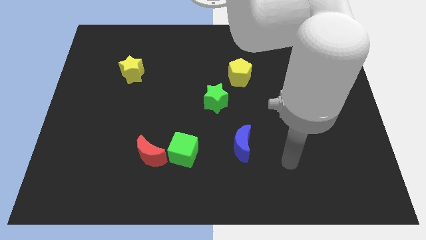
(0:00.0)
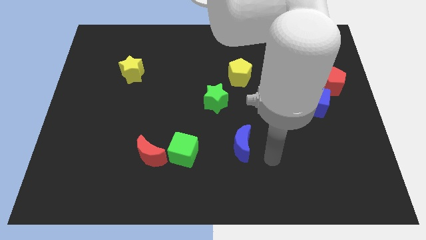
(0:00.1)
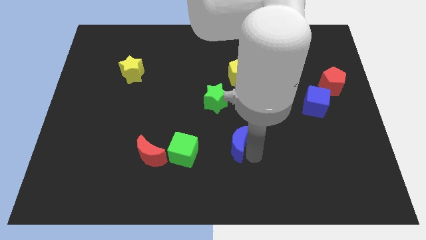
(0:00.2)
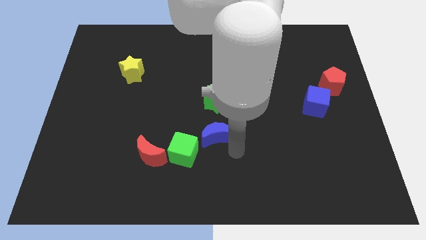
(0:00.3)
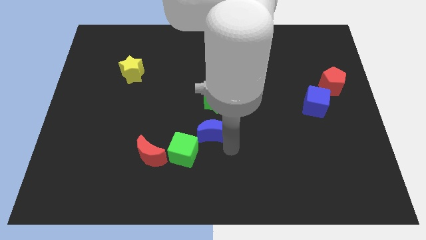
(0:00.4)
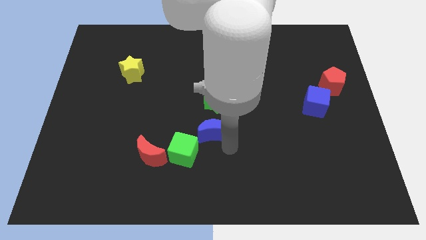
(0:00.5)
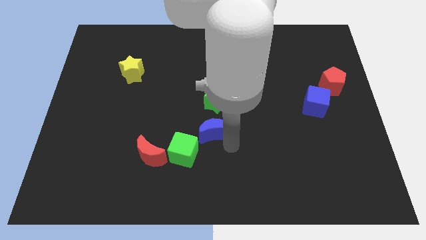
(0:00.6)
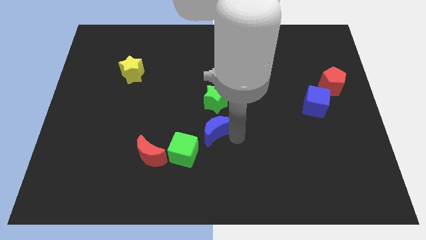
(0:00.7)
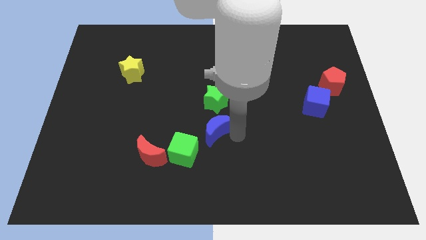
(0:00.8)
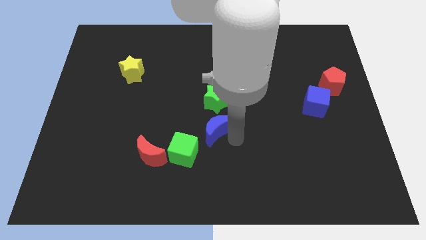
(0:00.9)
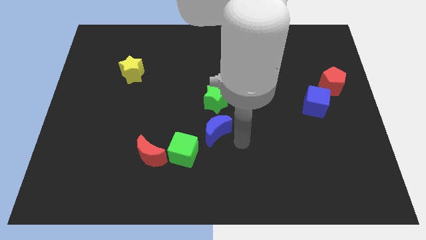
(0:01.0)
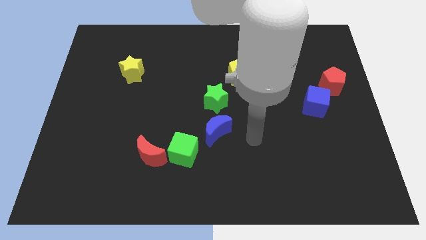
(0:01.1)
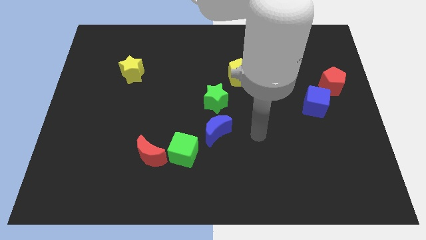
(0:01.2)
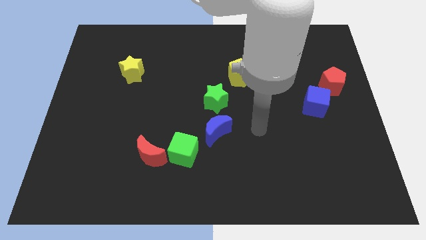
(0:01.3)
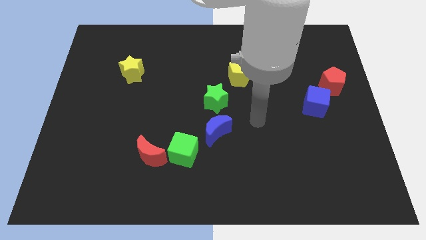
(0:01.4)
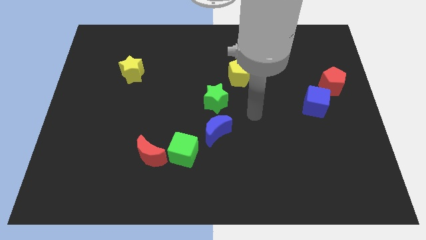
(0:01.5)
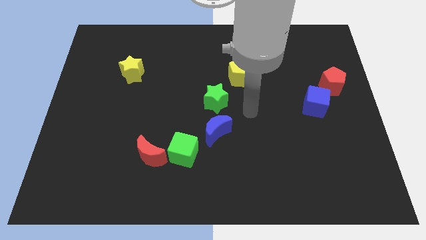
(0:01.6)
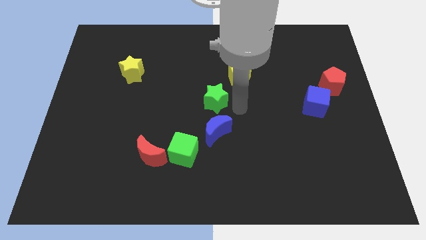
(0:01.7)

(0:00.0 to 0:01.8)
move the blue crescent to the bottom of the green star

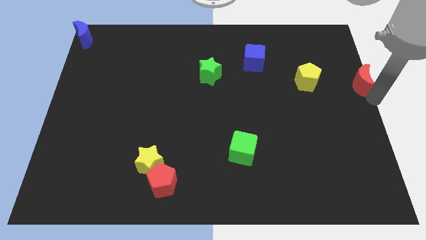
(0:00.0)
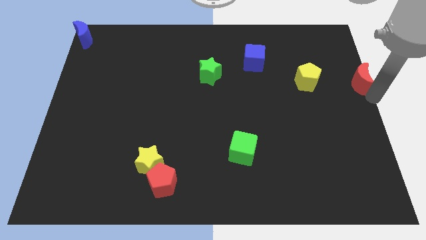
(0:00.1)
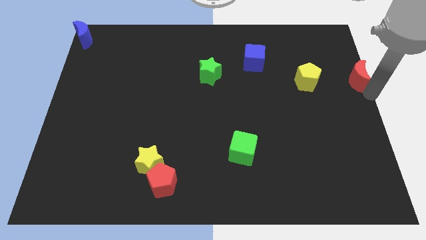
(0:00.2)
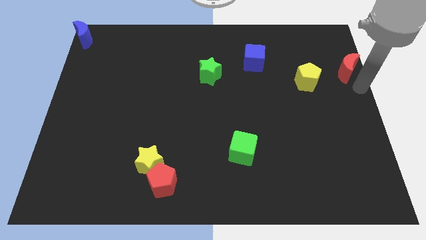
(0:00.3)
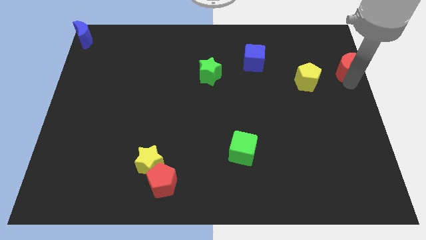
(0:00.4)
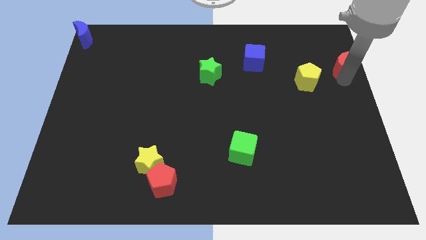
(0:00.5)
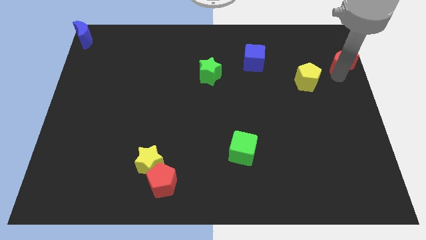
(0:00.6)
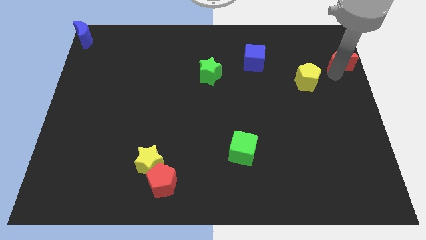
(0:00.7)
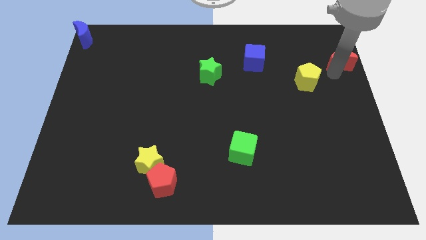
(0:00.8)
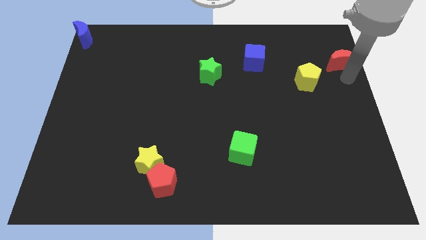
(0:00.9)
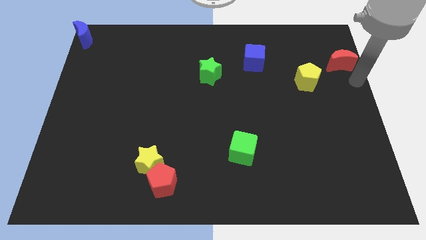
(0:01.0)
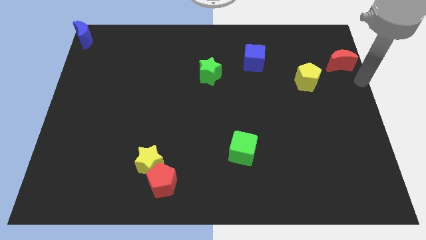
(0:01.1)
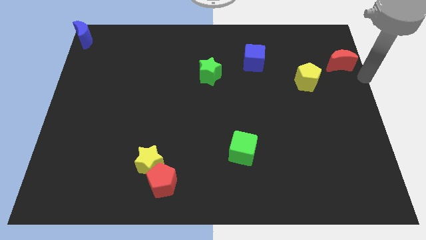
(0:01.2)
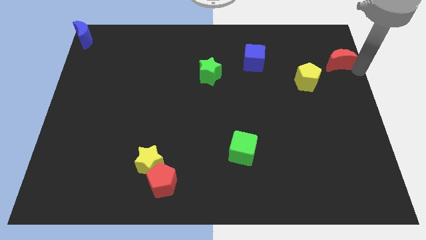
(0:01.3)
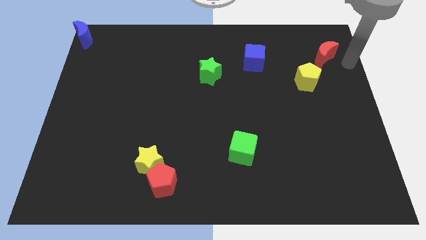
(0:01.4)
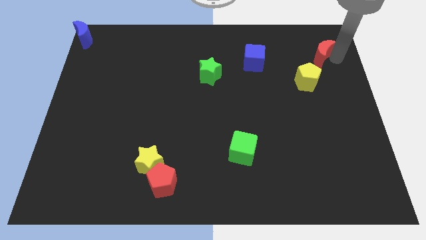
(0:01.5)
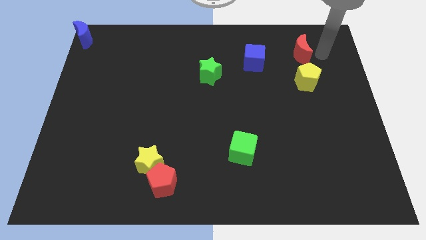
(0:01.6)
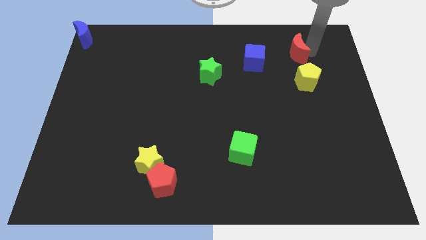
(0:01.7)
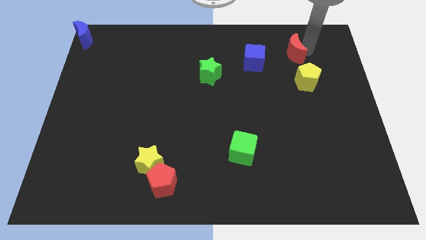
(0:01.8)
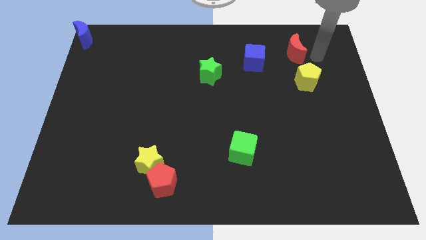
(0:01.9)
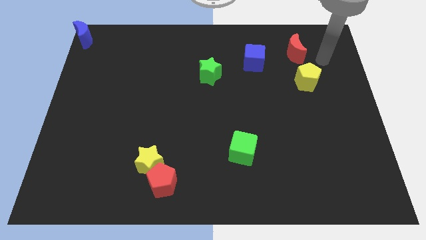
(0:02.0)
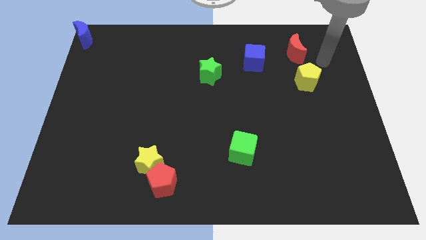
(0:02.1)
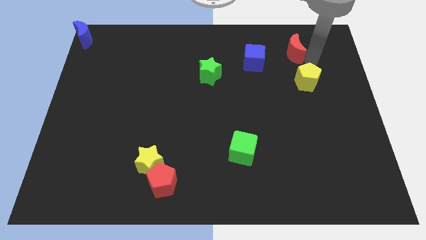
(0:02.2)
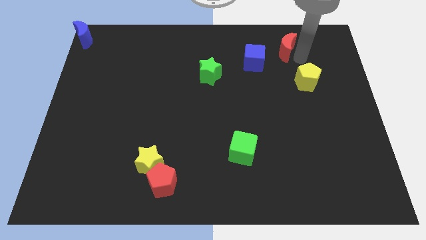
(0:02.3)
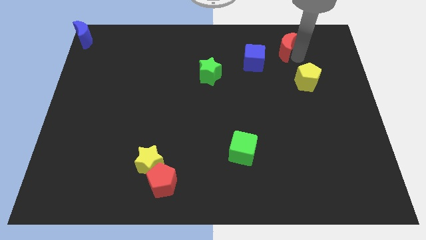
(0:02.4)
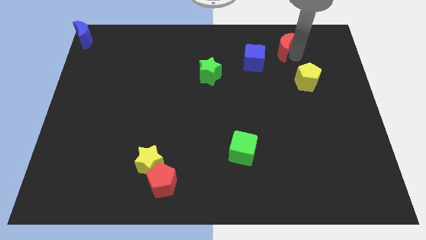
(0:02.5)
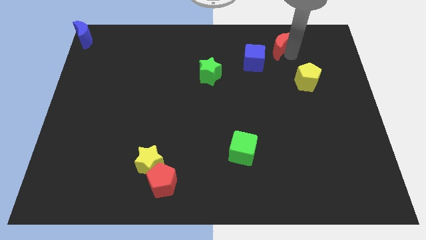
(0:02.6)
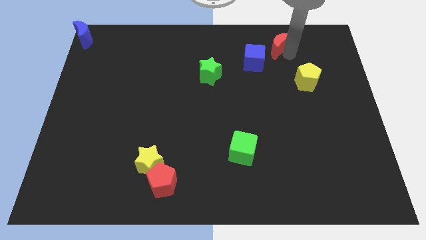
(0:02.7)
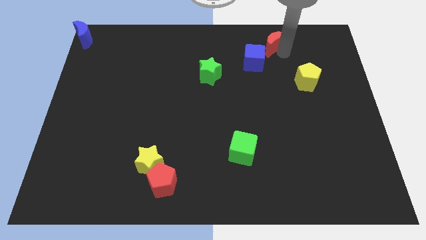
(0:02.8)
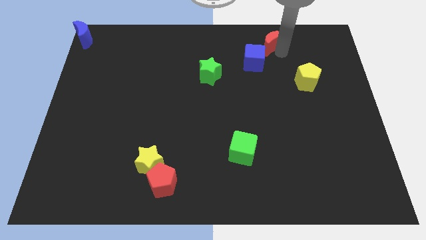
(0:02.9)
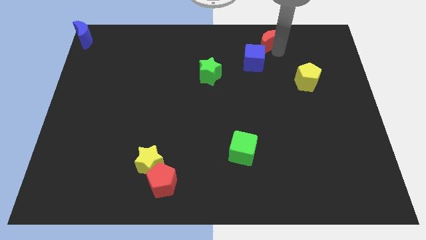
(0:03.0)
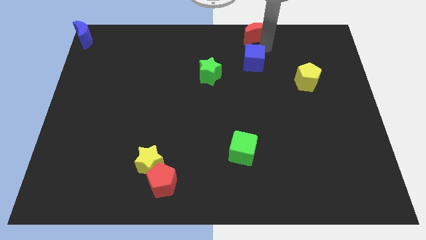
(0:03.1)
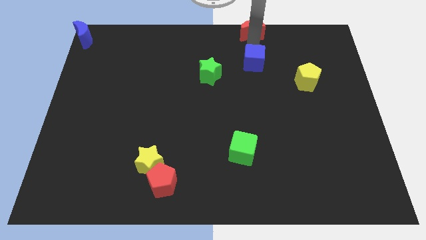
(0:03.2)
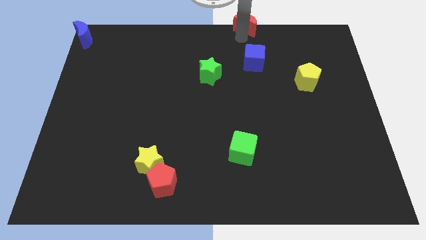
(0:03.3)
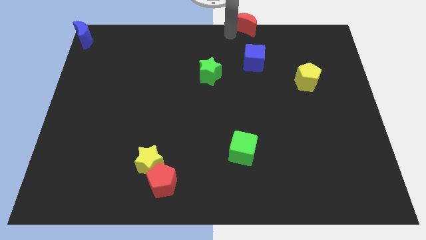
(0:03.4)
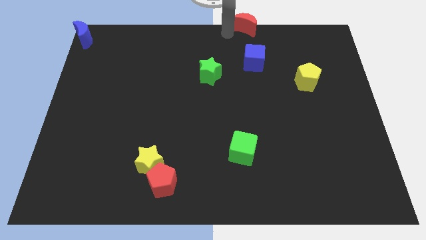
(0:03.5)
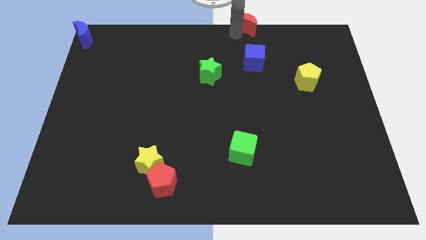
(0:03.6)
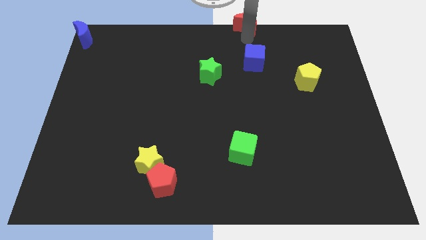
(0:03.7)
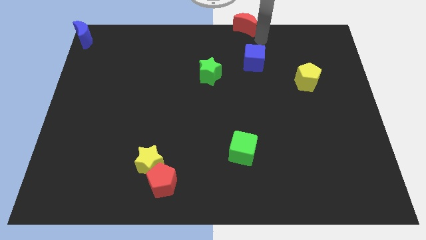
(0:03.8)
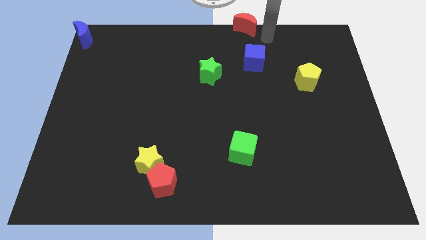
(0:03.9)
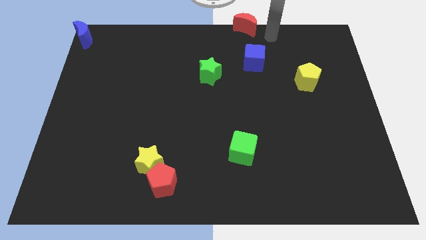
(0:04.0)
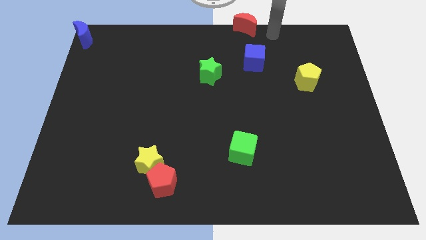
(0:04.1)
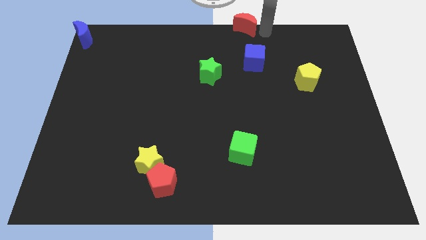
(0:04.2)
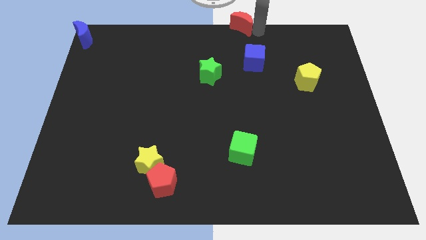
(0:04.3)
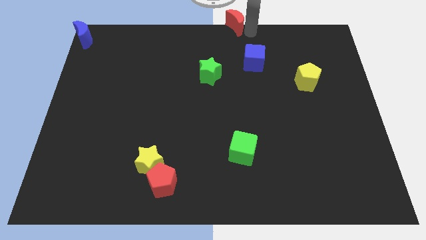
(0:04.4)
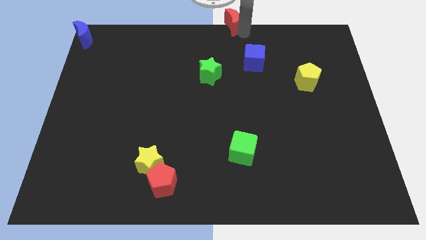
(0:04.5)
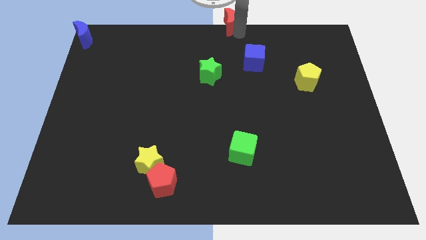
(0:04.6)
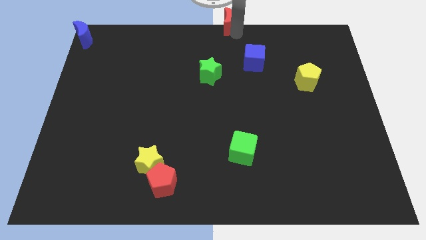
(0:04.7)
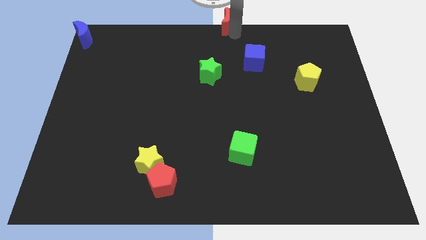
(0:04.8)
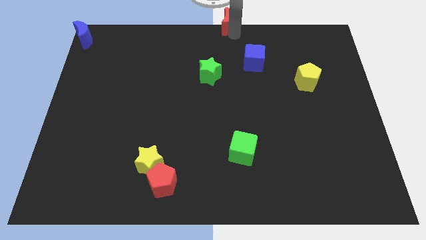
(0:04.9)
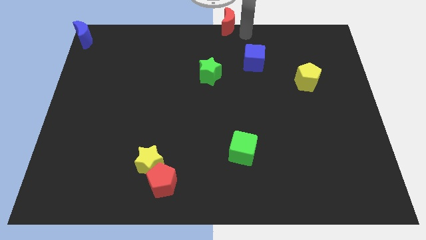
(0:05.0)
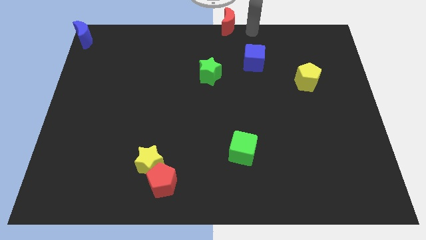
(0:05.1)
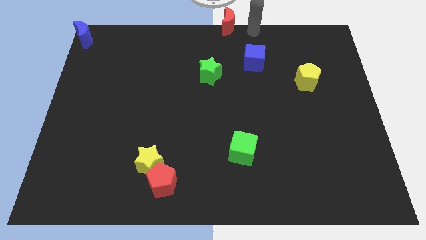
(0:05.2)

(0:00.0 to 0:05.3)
move the red moon to the top center of the board

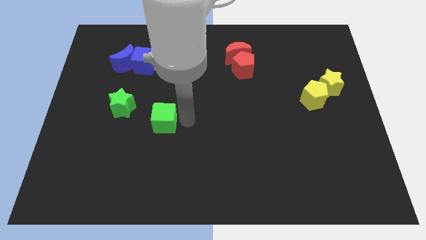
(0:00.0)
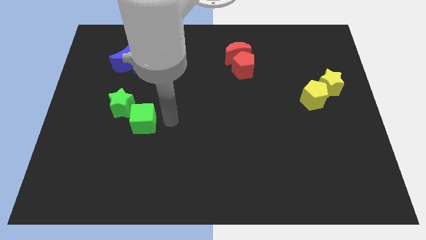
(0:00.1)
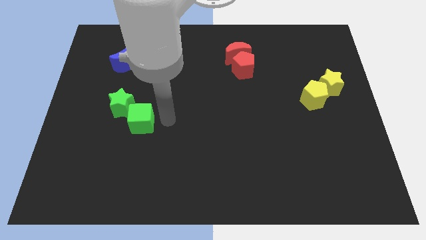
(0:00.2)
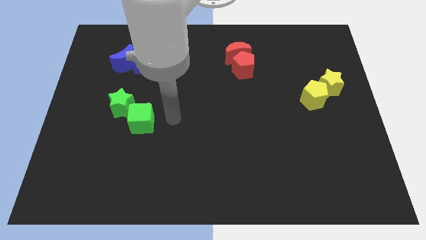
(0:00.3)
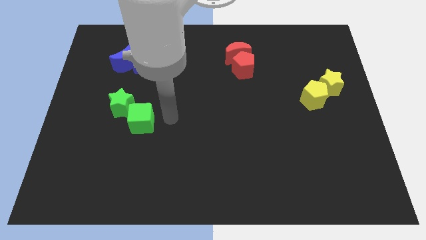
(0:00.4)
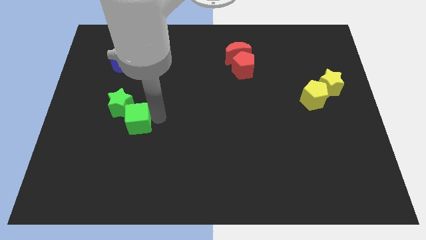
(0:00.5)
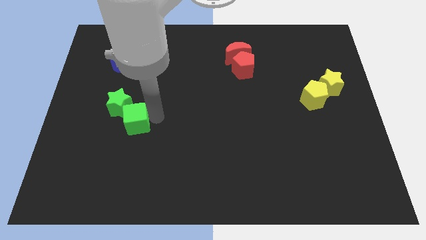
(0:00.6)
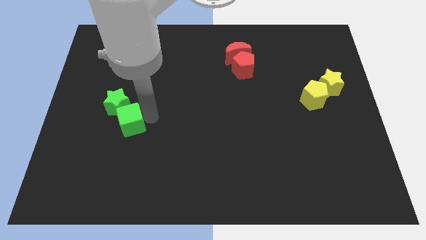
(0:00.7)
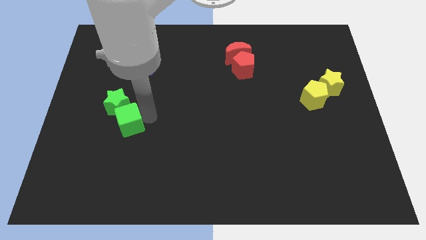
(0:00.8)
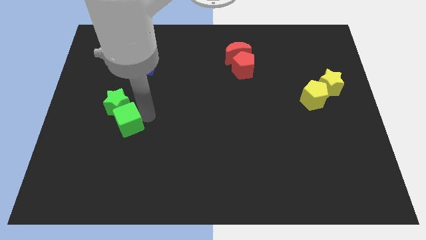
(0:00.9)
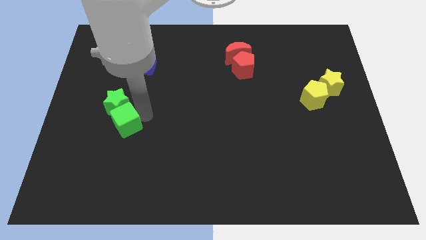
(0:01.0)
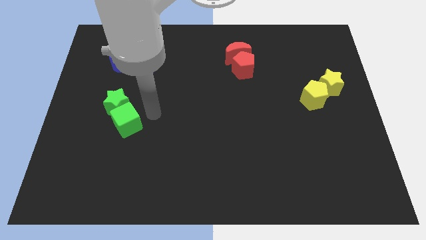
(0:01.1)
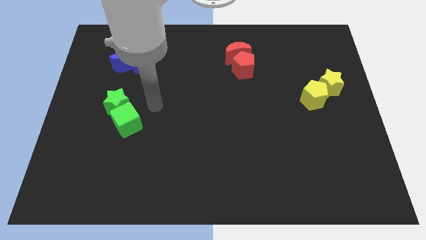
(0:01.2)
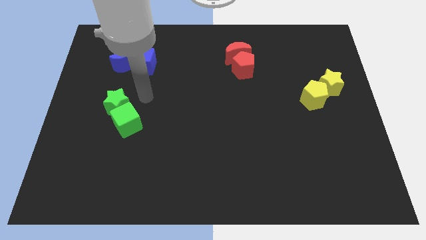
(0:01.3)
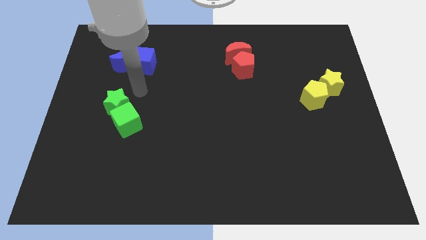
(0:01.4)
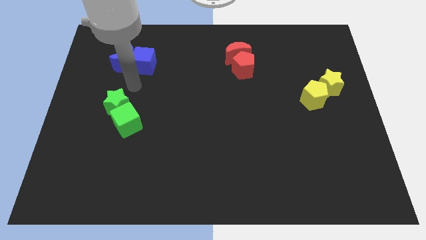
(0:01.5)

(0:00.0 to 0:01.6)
drag the green cube close to the green star

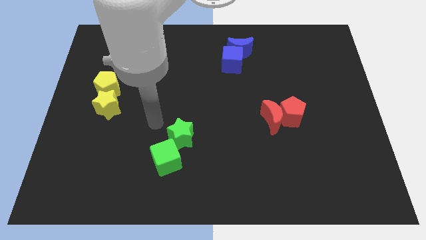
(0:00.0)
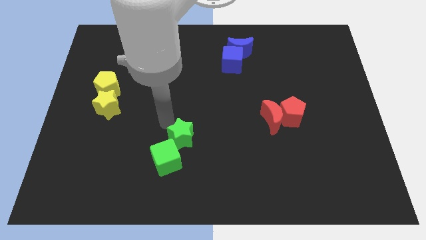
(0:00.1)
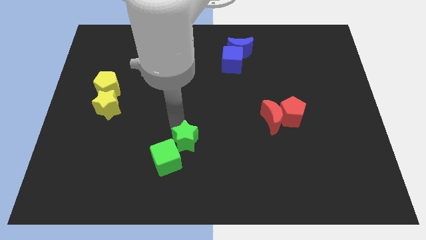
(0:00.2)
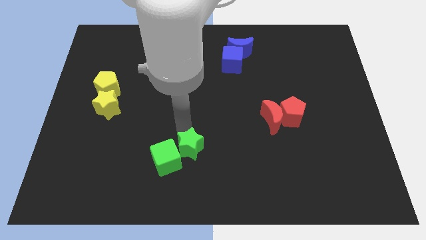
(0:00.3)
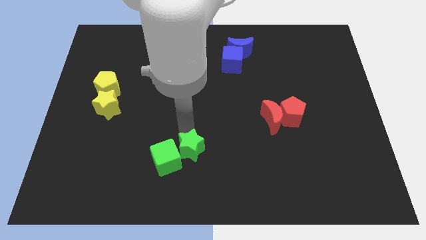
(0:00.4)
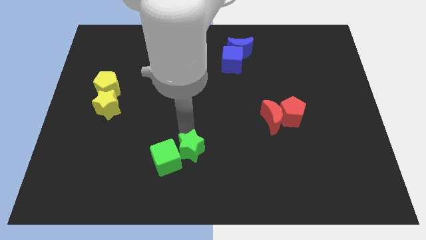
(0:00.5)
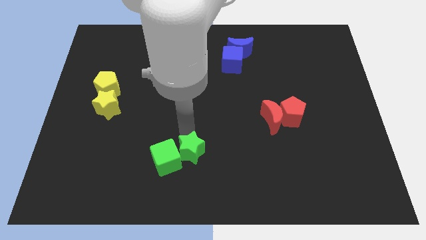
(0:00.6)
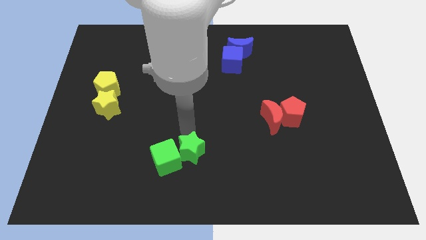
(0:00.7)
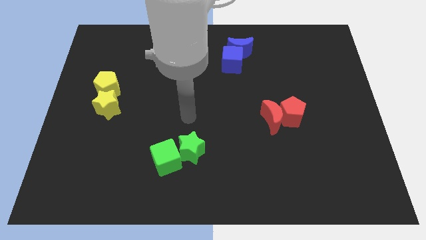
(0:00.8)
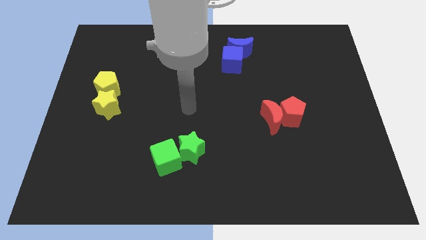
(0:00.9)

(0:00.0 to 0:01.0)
slightly push the green star to the right of the green cube
